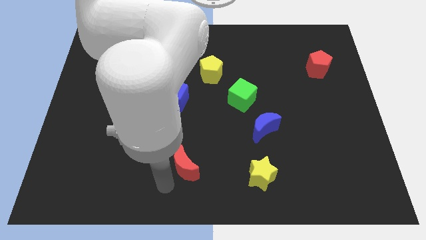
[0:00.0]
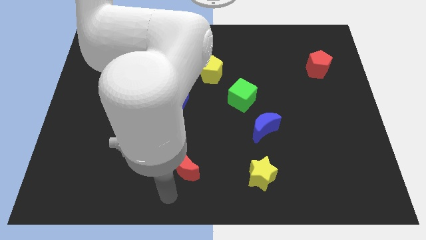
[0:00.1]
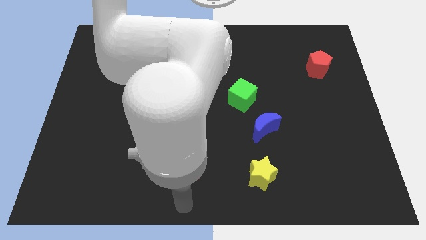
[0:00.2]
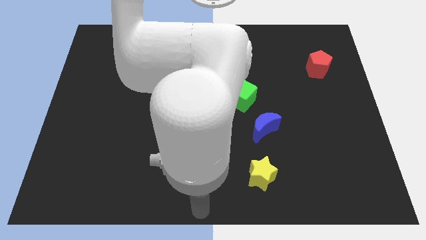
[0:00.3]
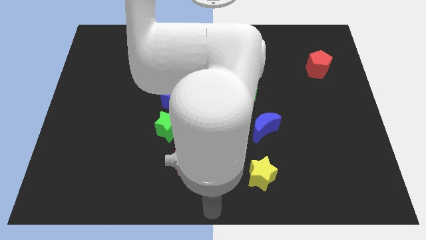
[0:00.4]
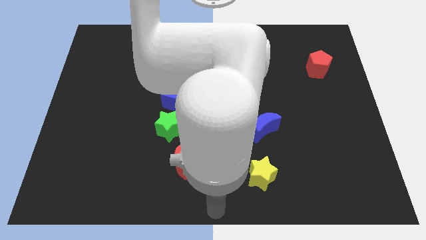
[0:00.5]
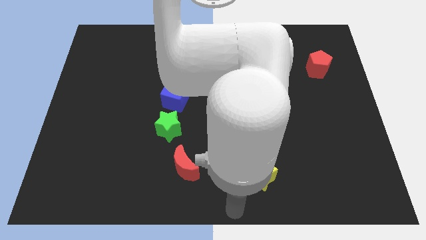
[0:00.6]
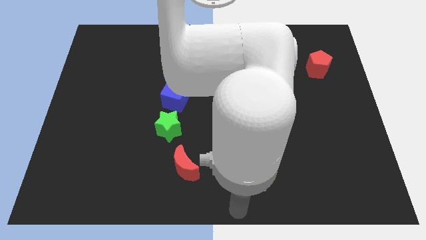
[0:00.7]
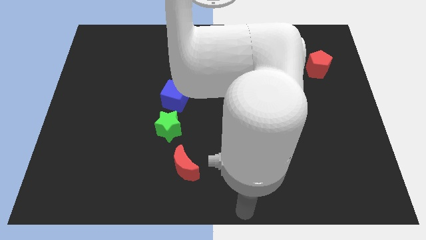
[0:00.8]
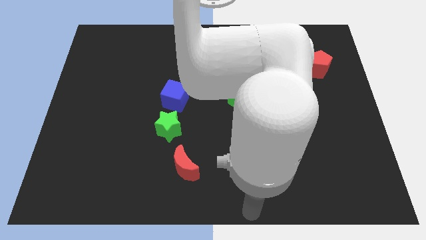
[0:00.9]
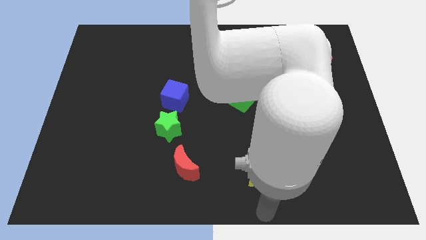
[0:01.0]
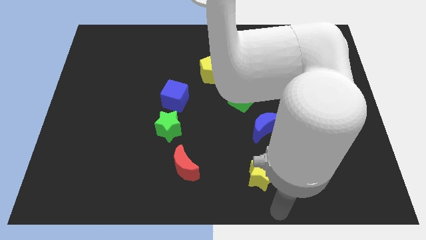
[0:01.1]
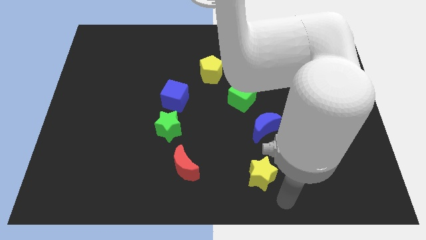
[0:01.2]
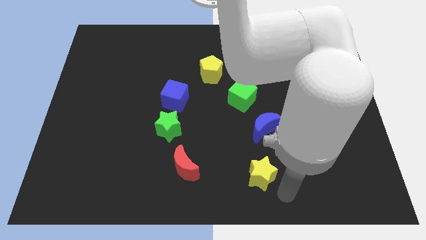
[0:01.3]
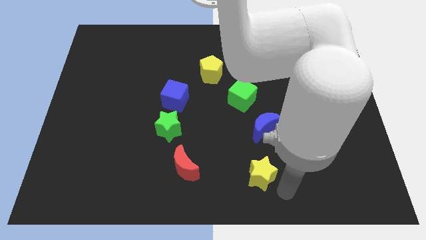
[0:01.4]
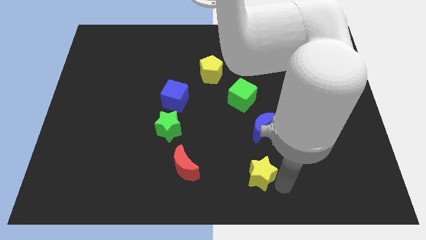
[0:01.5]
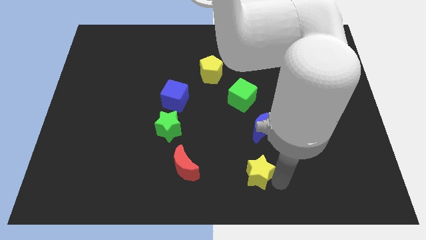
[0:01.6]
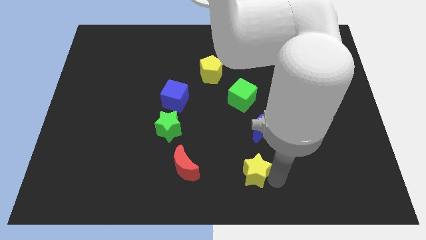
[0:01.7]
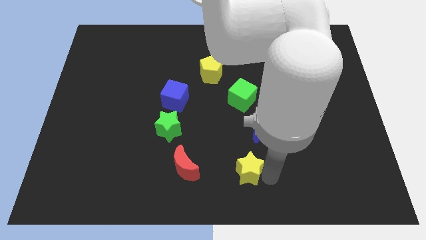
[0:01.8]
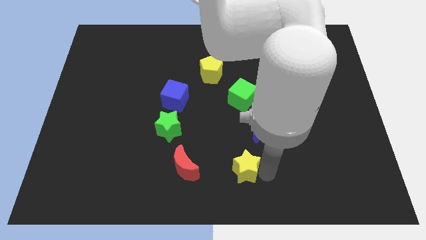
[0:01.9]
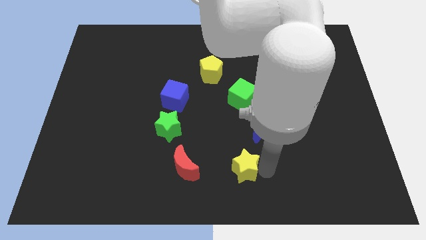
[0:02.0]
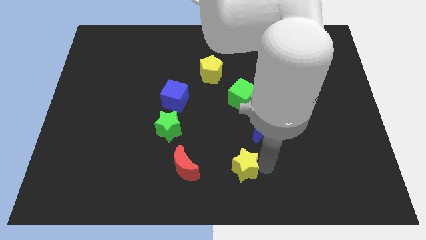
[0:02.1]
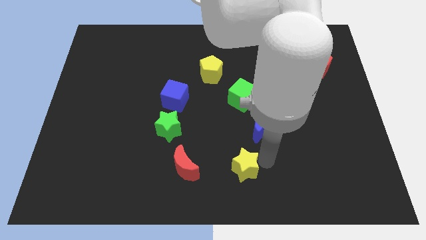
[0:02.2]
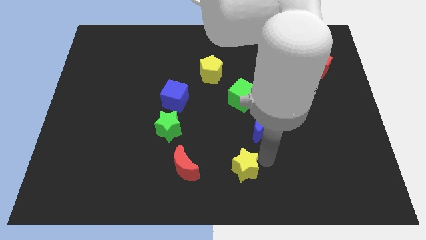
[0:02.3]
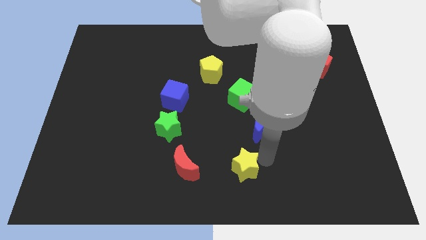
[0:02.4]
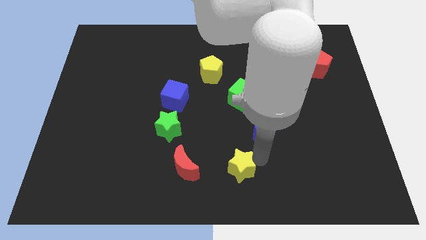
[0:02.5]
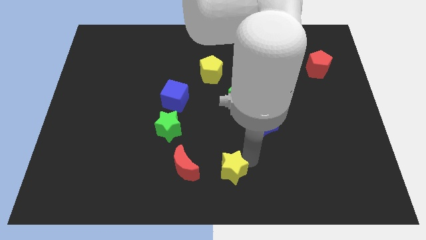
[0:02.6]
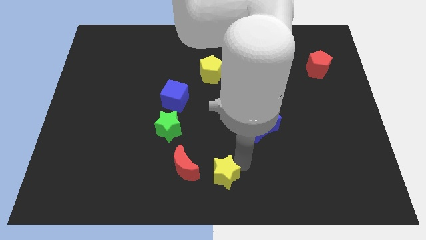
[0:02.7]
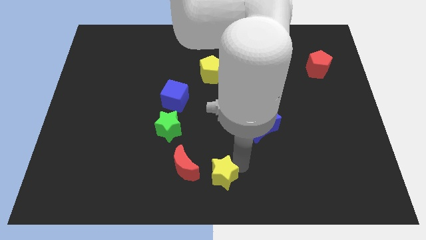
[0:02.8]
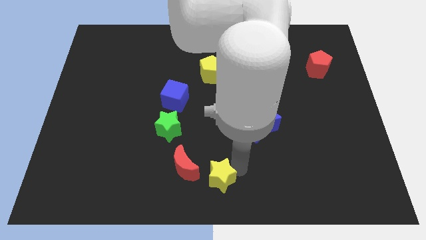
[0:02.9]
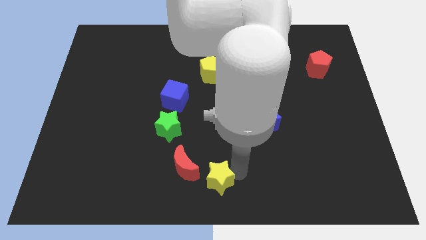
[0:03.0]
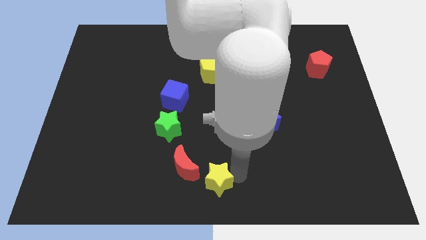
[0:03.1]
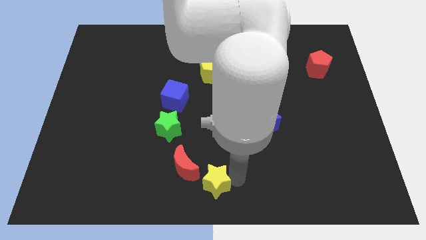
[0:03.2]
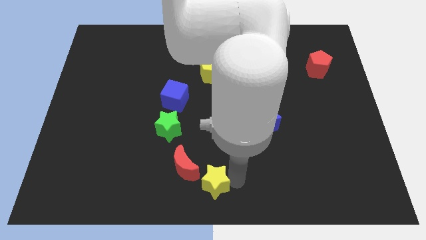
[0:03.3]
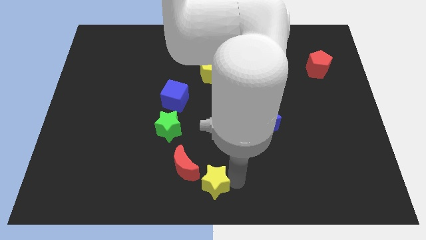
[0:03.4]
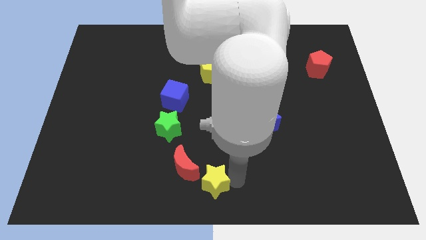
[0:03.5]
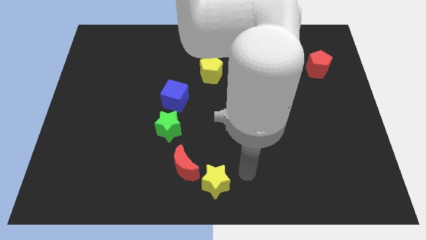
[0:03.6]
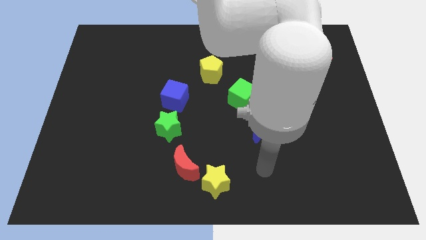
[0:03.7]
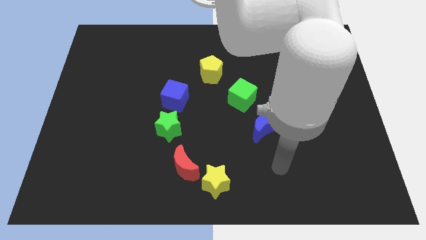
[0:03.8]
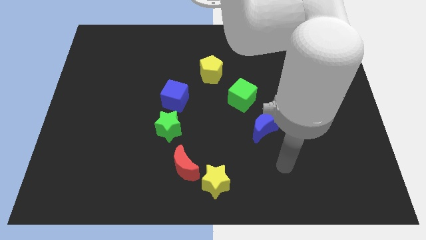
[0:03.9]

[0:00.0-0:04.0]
place the yellow star diagonal below red moon

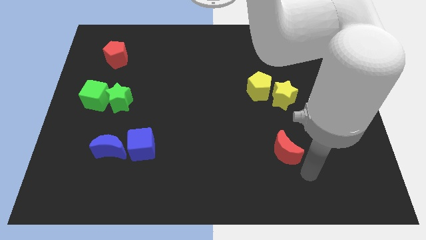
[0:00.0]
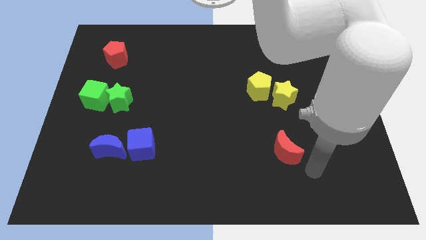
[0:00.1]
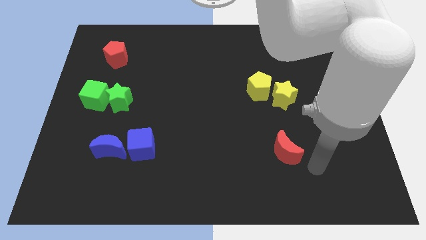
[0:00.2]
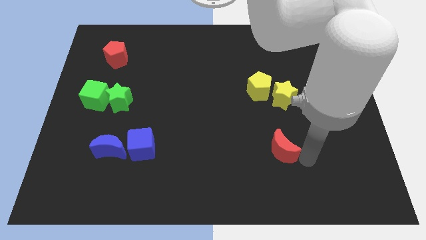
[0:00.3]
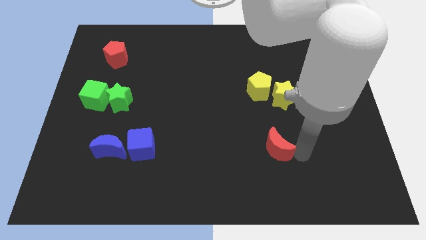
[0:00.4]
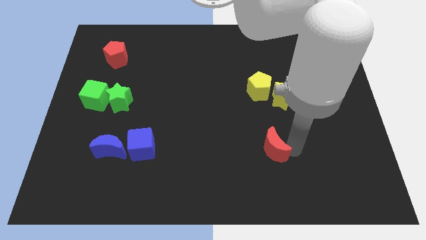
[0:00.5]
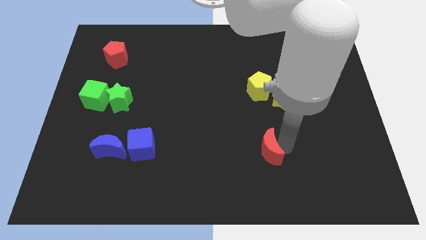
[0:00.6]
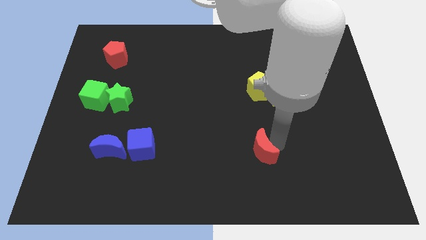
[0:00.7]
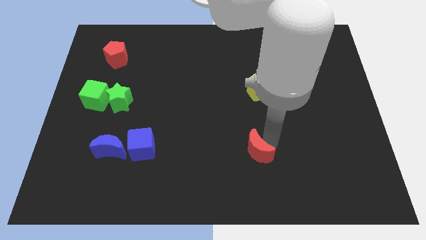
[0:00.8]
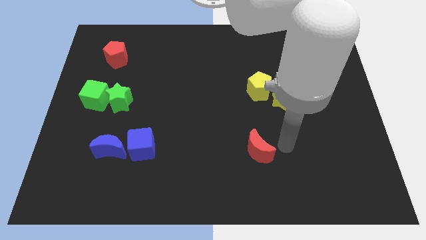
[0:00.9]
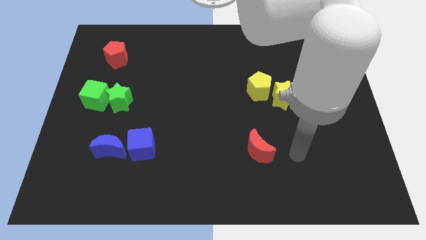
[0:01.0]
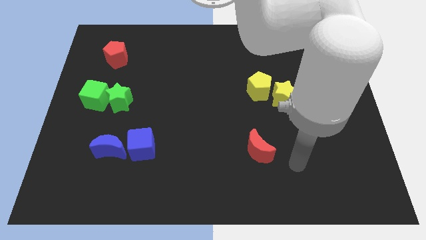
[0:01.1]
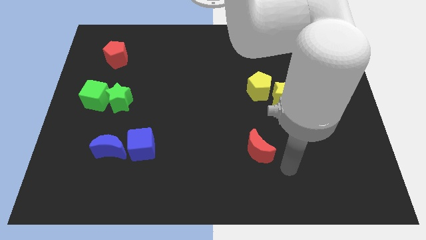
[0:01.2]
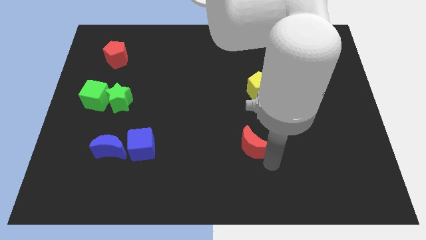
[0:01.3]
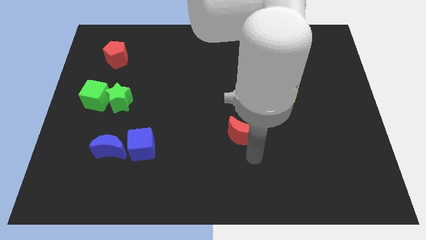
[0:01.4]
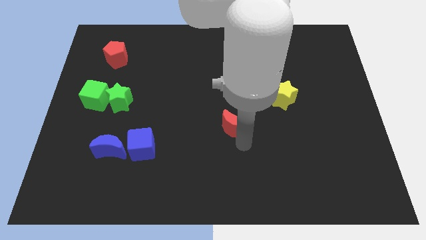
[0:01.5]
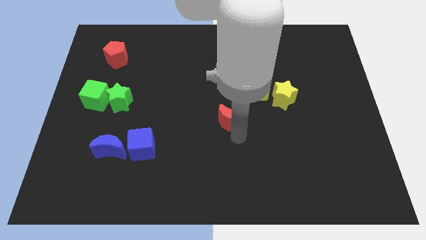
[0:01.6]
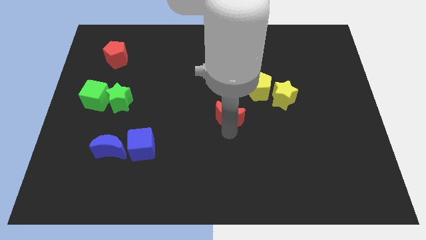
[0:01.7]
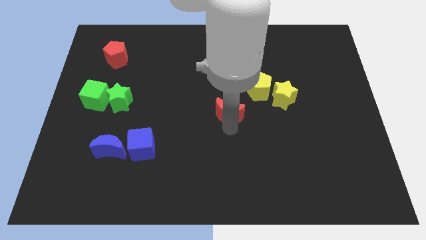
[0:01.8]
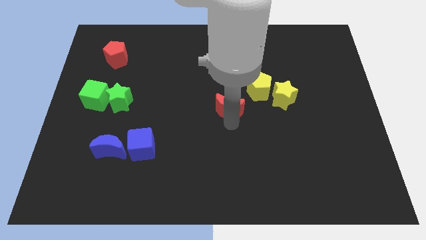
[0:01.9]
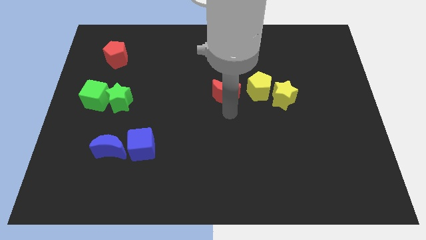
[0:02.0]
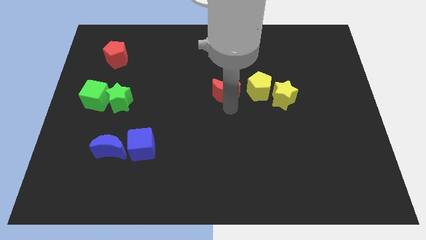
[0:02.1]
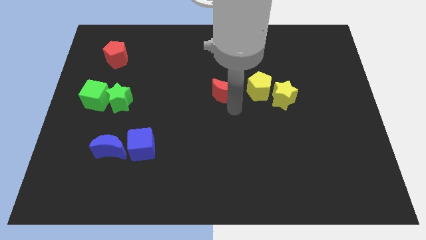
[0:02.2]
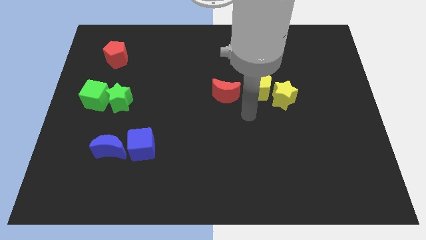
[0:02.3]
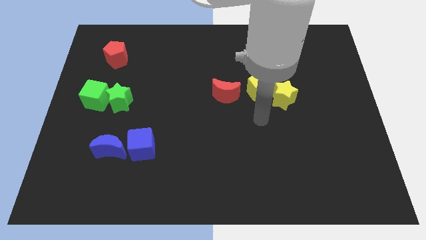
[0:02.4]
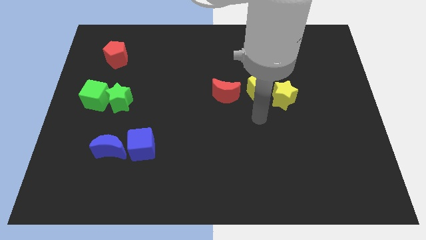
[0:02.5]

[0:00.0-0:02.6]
place the red moon left to the yellow pentagon

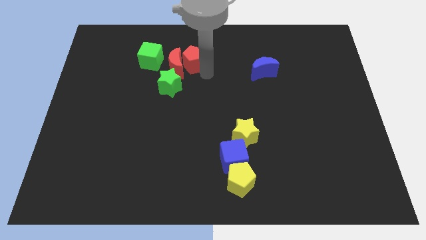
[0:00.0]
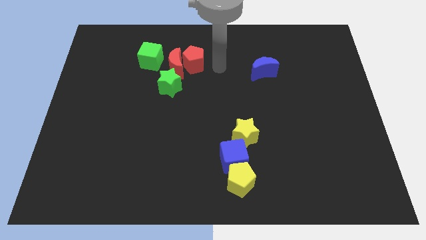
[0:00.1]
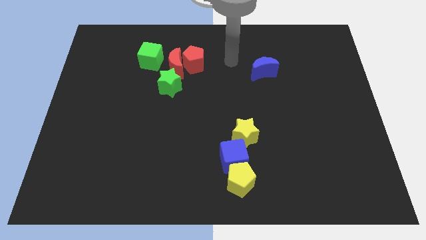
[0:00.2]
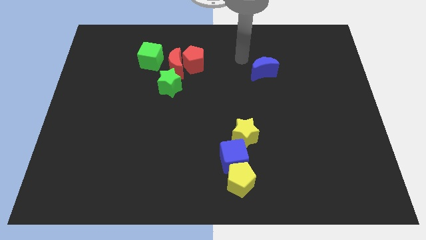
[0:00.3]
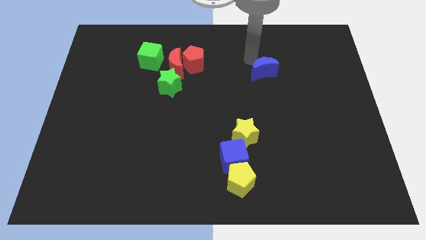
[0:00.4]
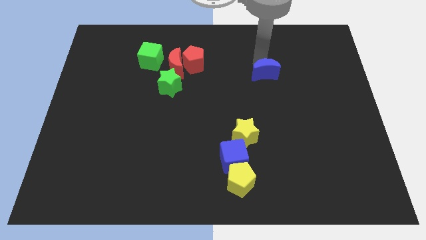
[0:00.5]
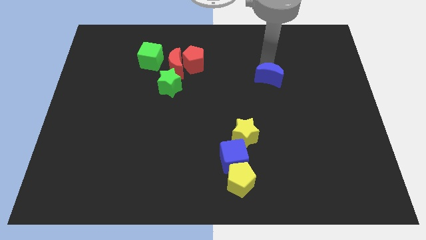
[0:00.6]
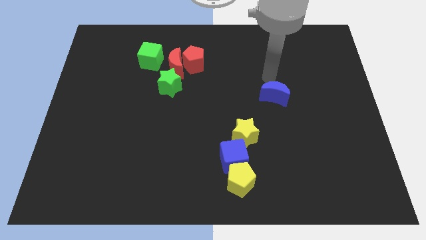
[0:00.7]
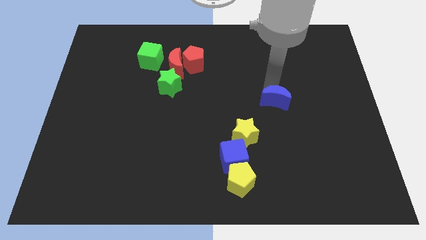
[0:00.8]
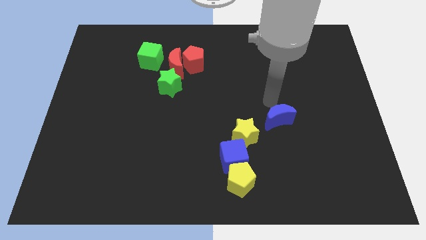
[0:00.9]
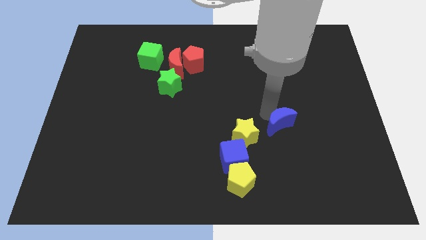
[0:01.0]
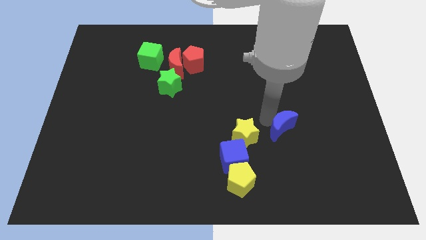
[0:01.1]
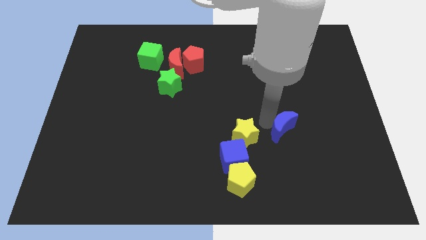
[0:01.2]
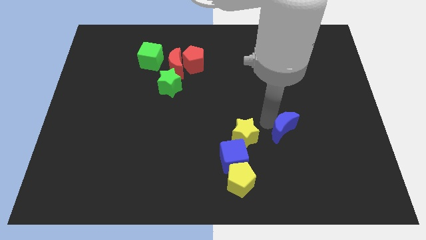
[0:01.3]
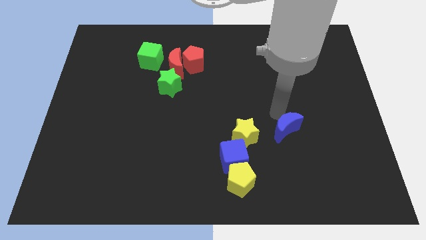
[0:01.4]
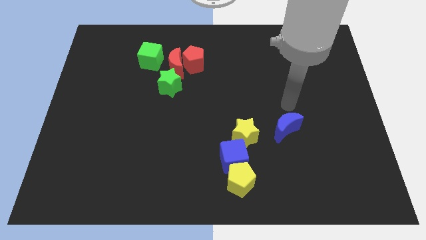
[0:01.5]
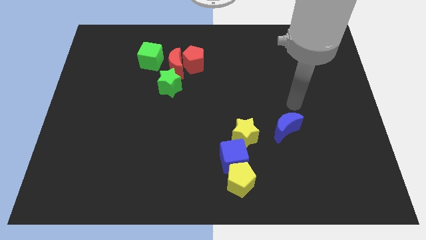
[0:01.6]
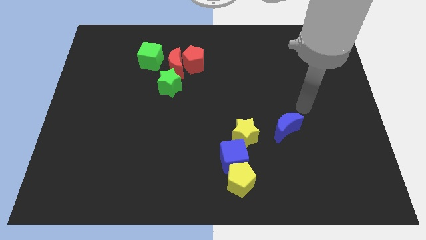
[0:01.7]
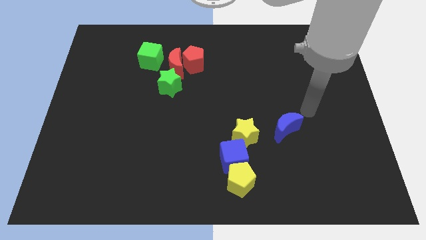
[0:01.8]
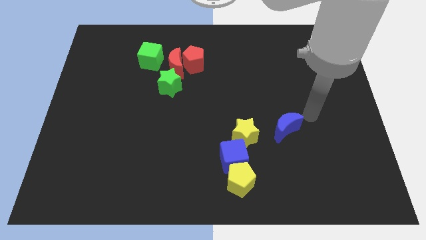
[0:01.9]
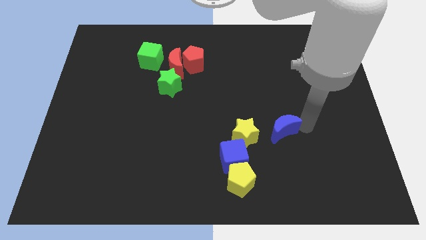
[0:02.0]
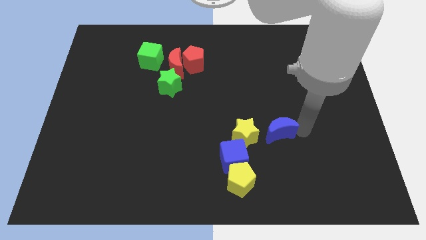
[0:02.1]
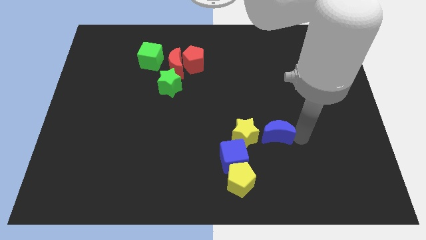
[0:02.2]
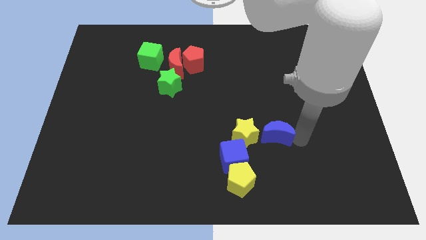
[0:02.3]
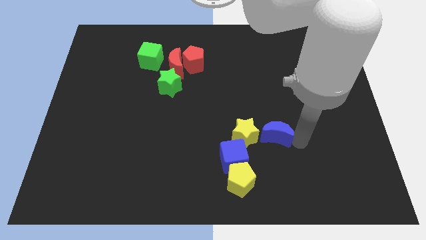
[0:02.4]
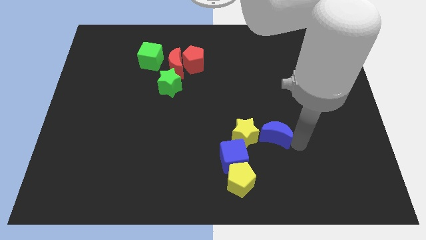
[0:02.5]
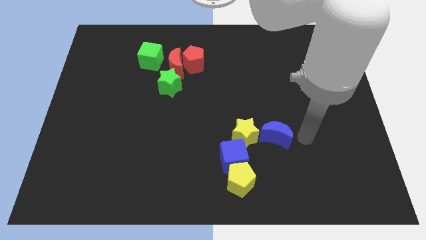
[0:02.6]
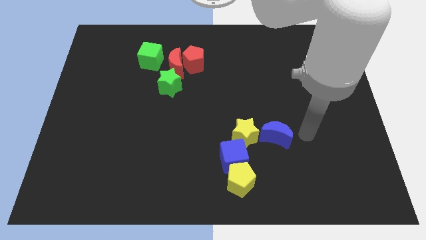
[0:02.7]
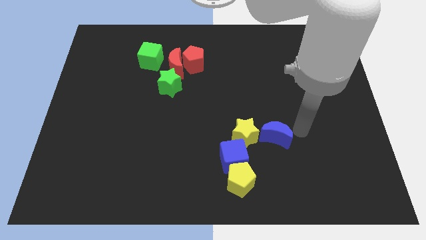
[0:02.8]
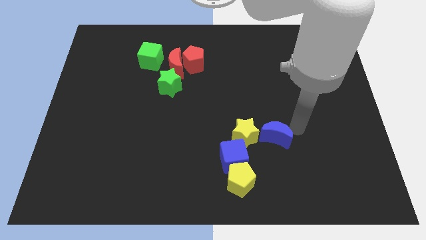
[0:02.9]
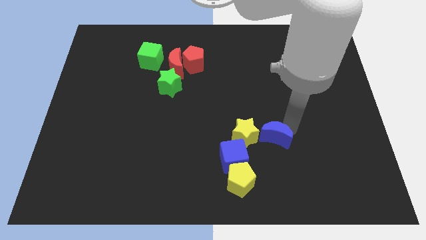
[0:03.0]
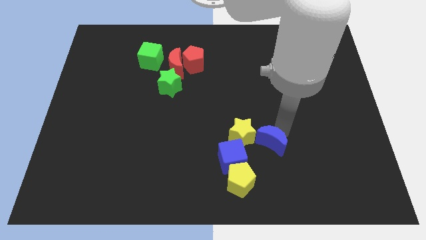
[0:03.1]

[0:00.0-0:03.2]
move the blue crescent into the yellow star
